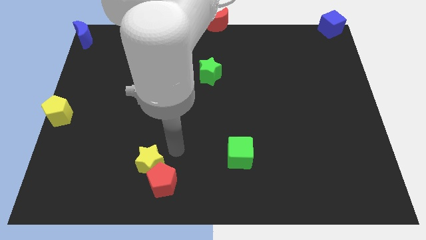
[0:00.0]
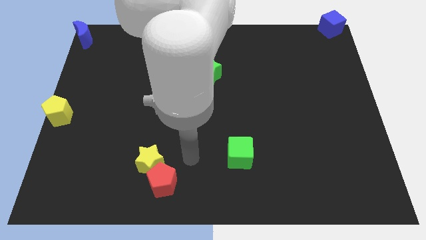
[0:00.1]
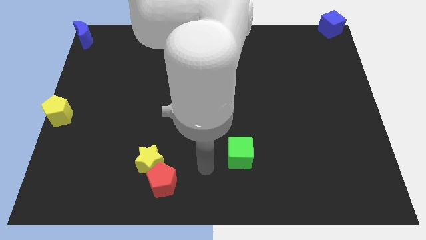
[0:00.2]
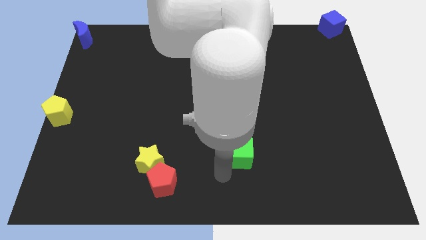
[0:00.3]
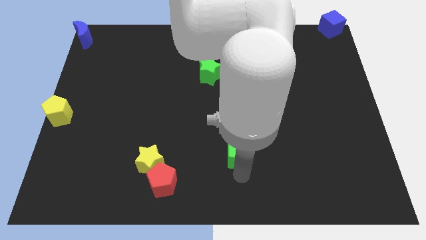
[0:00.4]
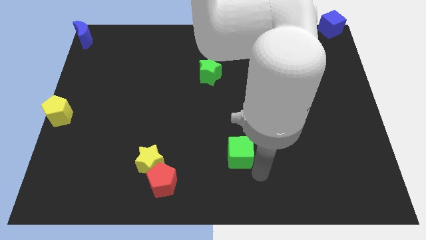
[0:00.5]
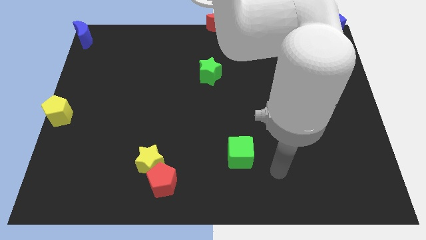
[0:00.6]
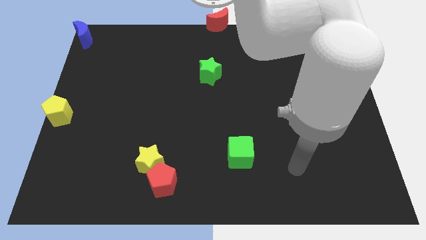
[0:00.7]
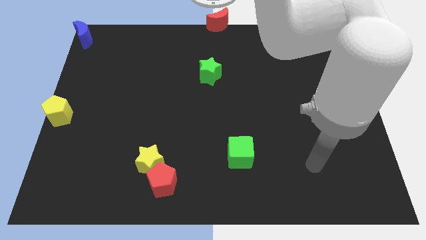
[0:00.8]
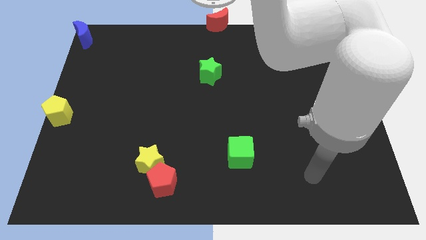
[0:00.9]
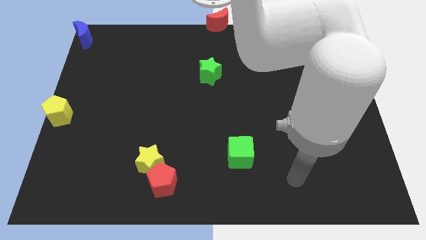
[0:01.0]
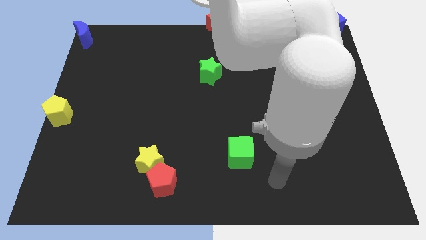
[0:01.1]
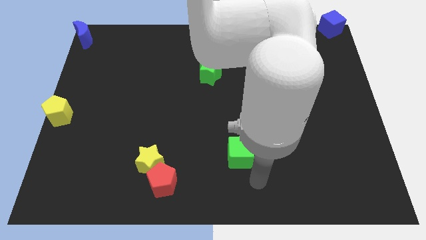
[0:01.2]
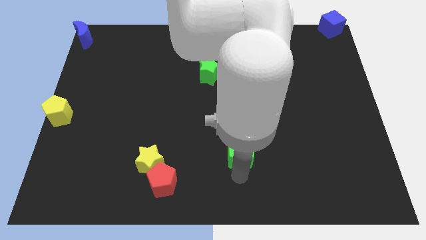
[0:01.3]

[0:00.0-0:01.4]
point your arm at the bottom of green cube

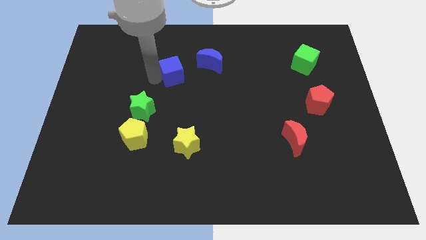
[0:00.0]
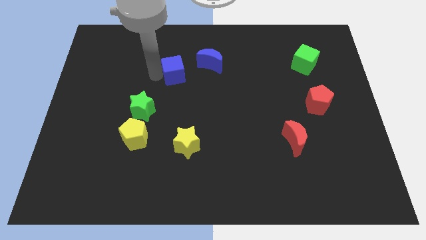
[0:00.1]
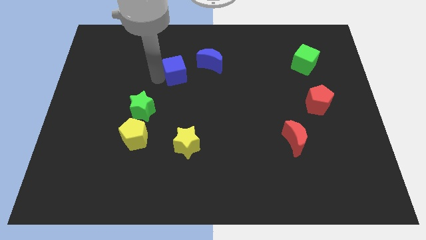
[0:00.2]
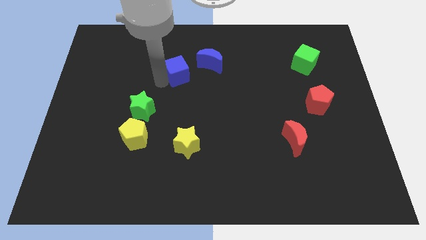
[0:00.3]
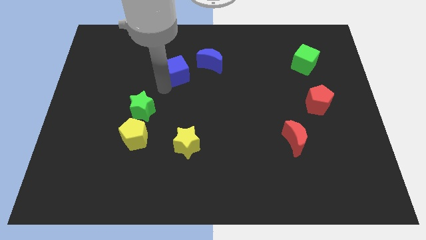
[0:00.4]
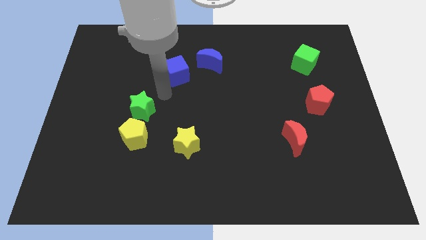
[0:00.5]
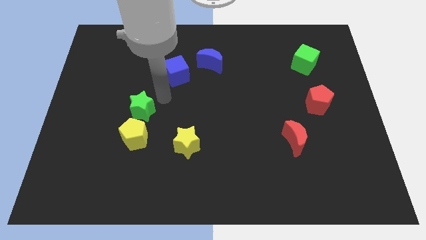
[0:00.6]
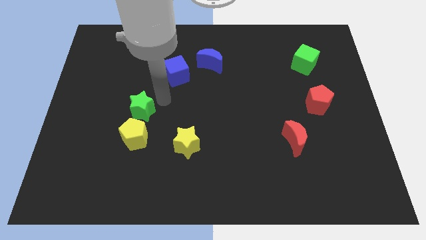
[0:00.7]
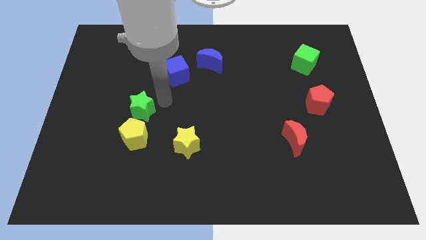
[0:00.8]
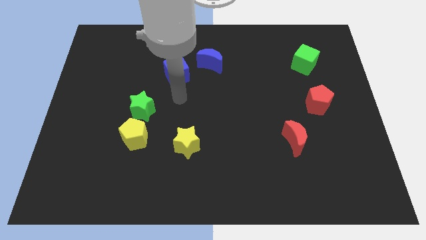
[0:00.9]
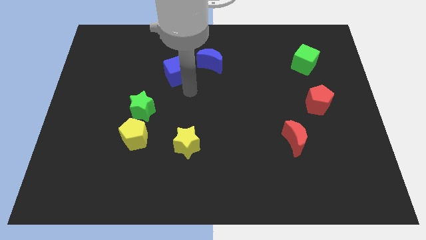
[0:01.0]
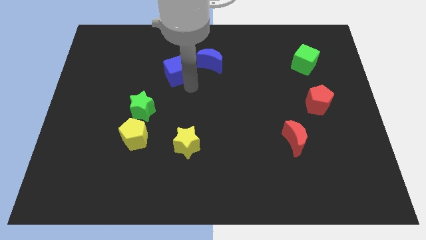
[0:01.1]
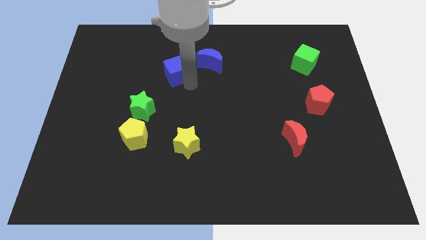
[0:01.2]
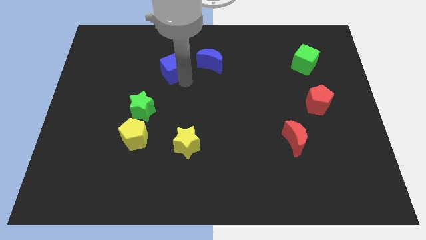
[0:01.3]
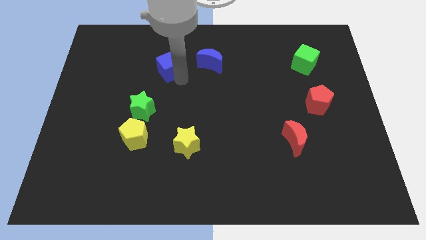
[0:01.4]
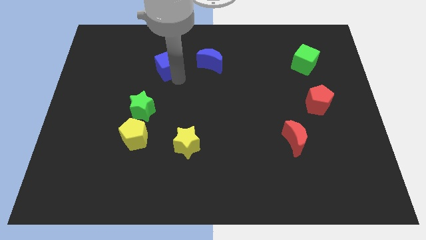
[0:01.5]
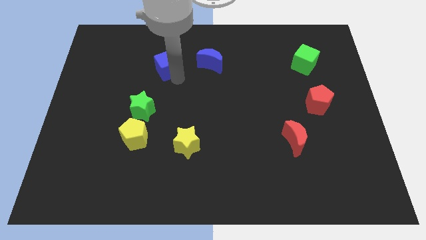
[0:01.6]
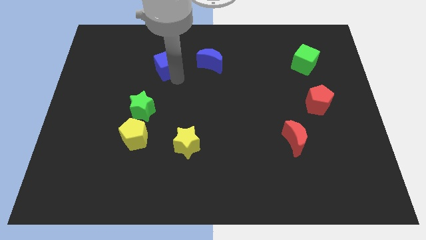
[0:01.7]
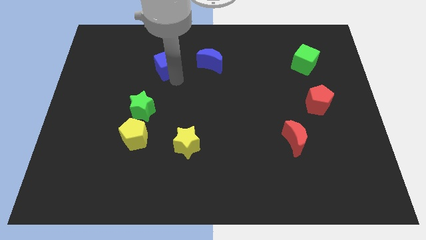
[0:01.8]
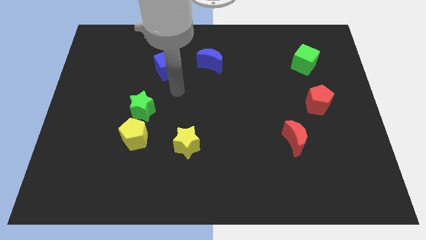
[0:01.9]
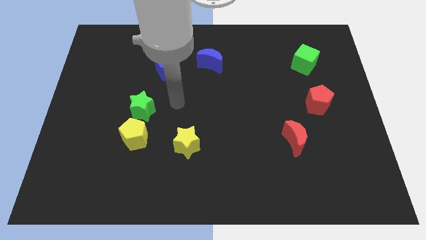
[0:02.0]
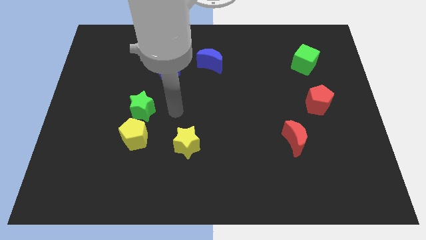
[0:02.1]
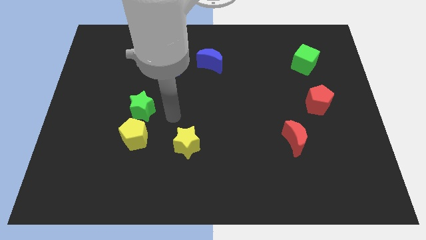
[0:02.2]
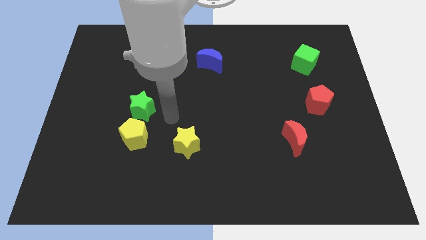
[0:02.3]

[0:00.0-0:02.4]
push blue cube slightly upwards

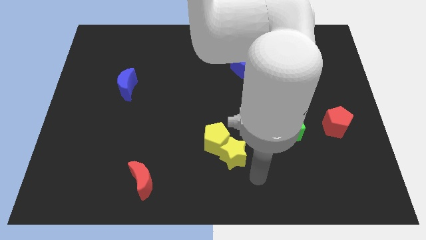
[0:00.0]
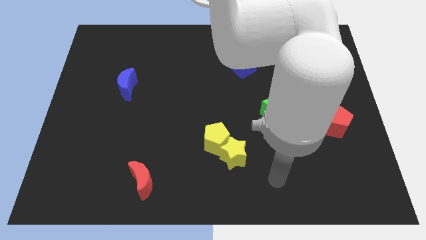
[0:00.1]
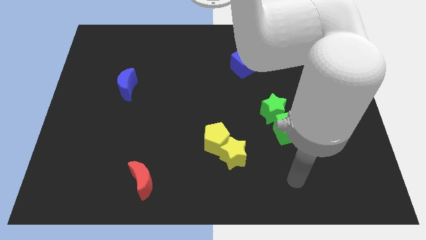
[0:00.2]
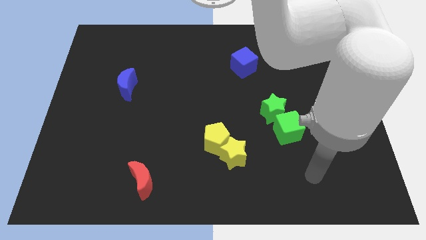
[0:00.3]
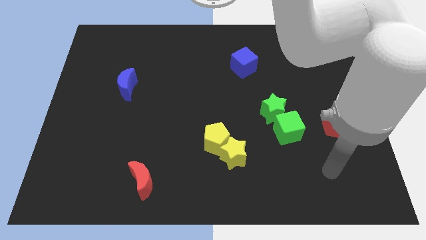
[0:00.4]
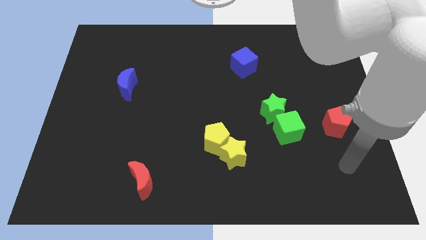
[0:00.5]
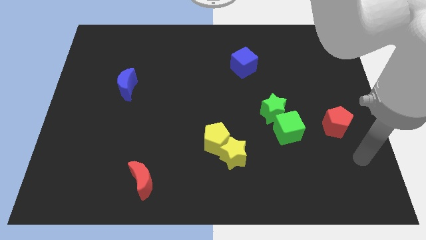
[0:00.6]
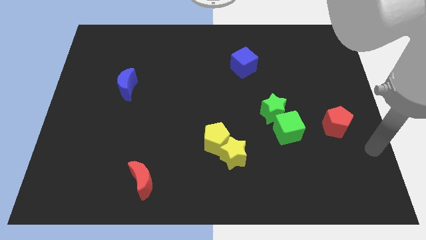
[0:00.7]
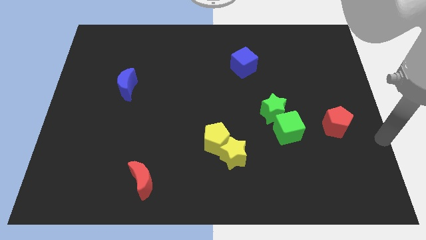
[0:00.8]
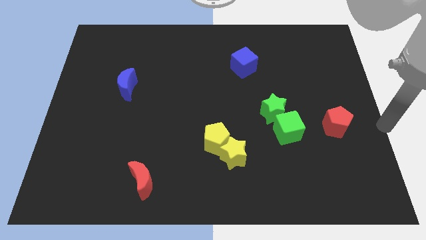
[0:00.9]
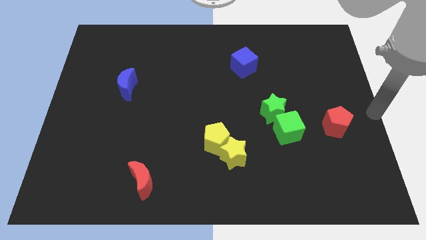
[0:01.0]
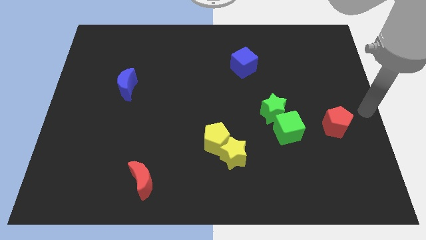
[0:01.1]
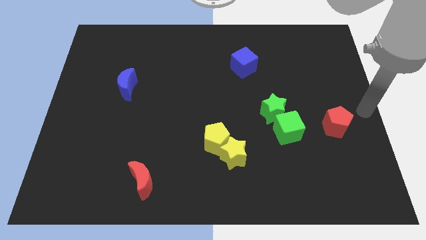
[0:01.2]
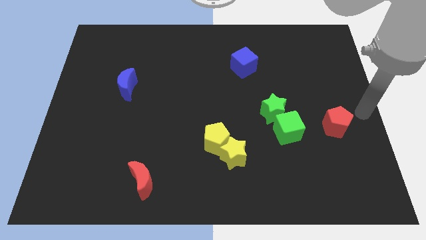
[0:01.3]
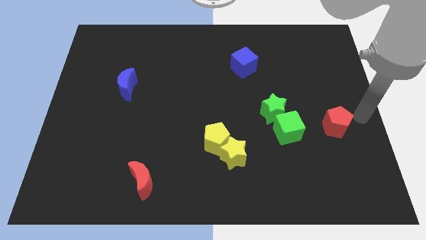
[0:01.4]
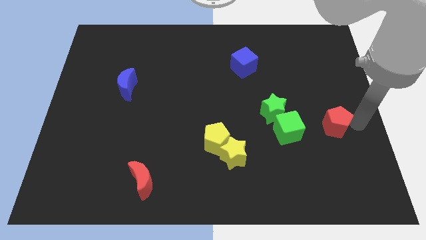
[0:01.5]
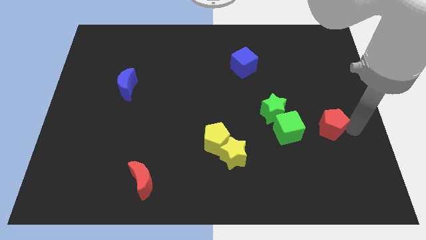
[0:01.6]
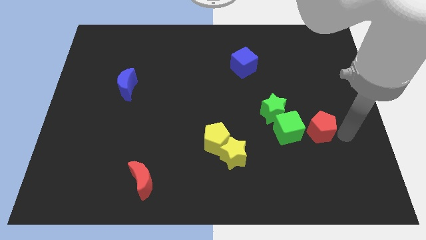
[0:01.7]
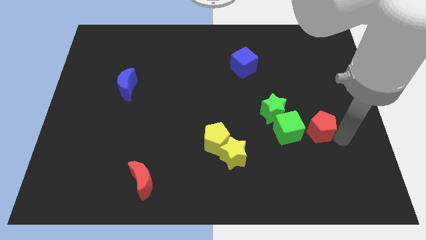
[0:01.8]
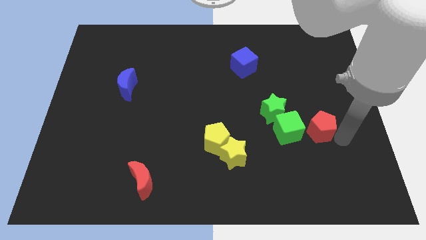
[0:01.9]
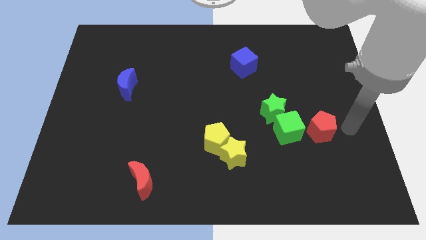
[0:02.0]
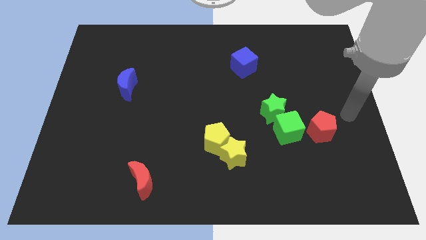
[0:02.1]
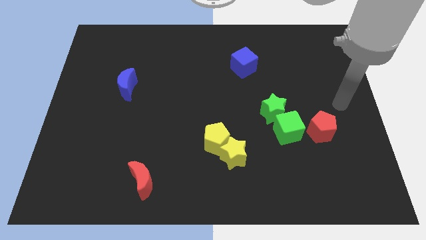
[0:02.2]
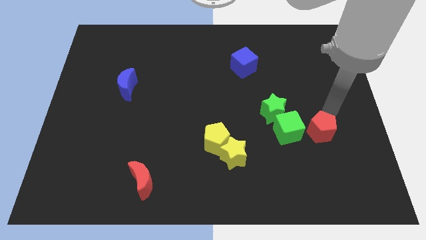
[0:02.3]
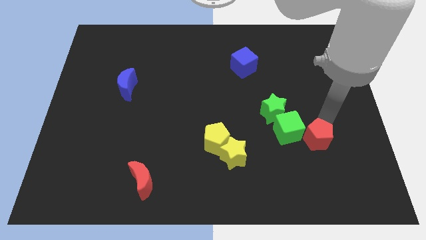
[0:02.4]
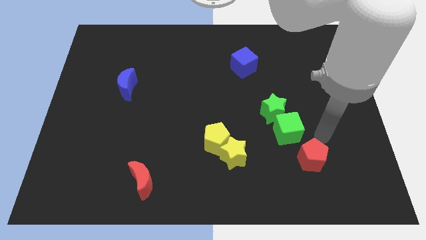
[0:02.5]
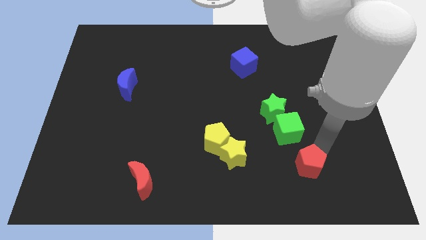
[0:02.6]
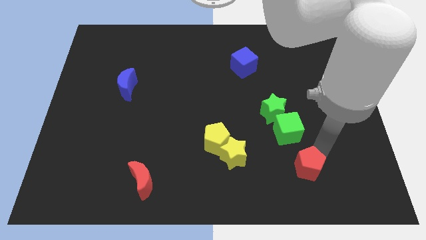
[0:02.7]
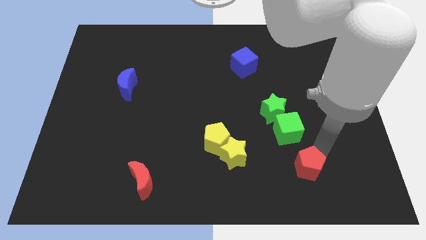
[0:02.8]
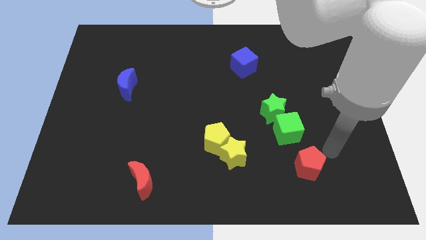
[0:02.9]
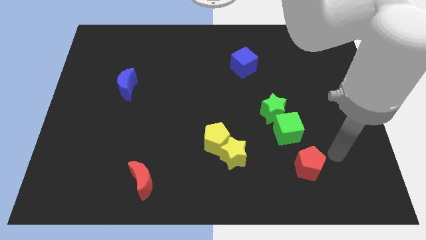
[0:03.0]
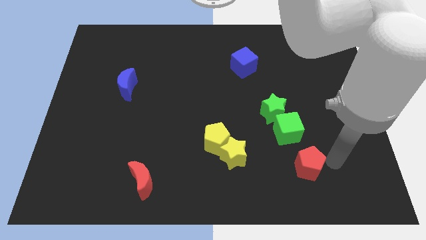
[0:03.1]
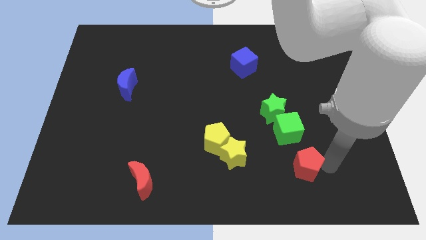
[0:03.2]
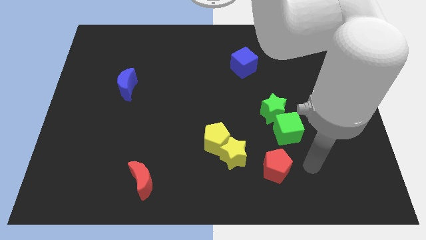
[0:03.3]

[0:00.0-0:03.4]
place the red pentagon under the green cube

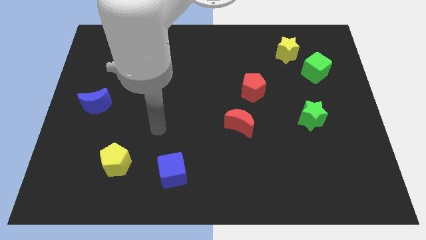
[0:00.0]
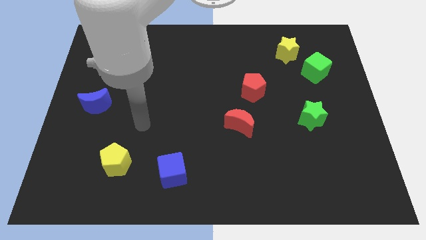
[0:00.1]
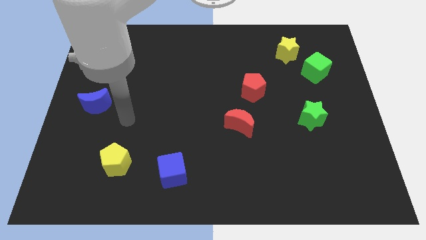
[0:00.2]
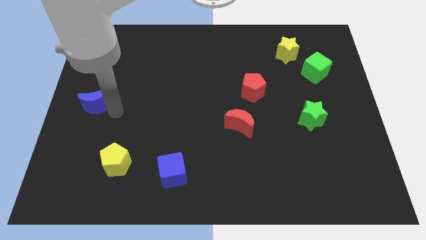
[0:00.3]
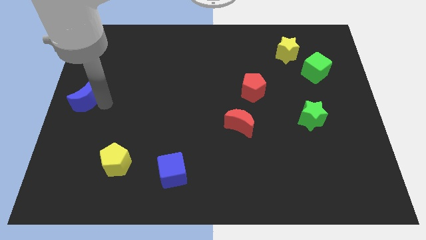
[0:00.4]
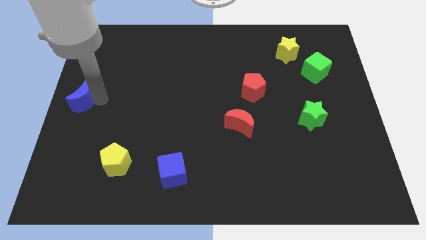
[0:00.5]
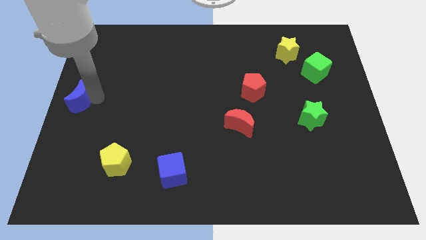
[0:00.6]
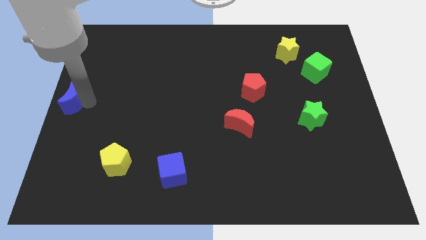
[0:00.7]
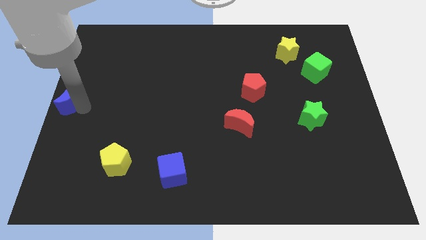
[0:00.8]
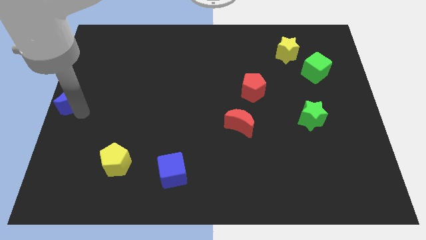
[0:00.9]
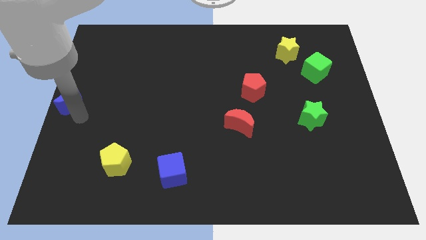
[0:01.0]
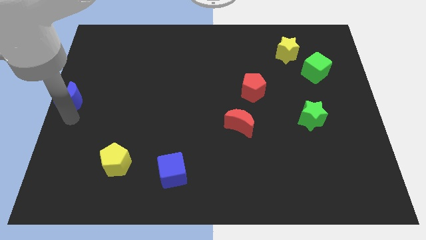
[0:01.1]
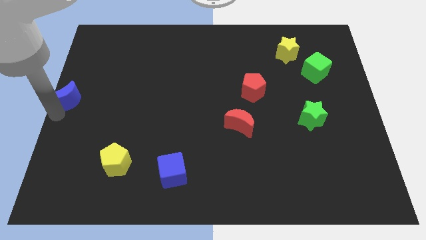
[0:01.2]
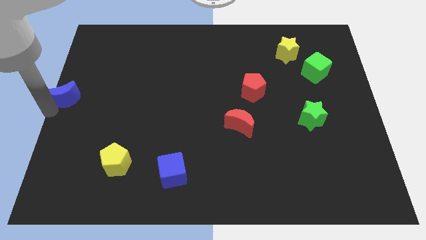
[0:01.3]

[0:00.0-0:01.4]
place the blue moon to the center left side of the board

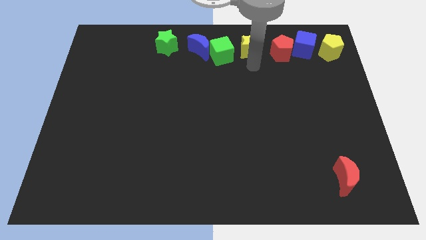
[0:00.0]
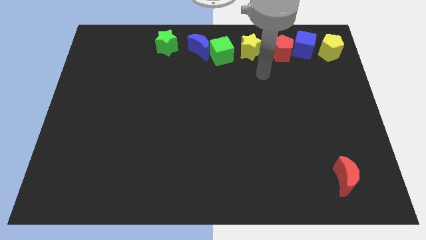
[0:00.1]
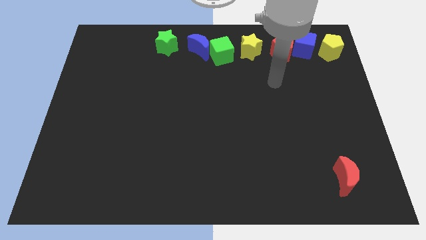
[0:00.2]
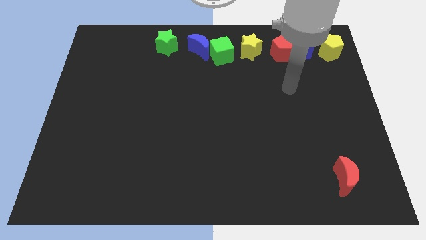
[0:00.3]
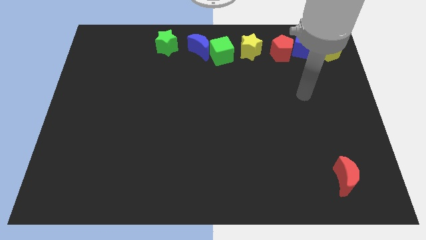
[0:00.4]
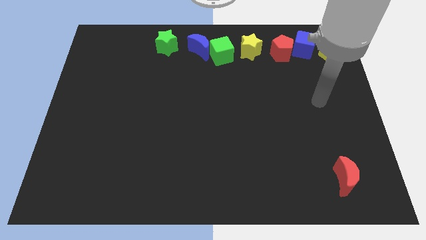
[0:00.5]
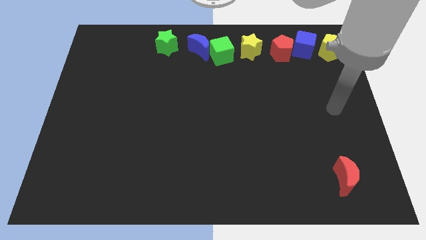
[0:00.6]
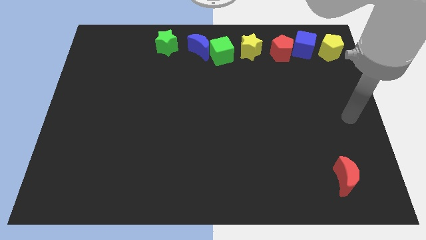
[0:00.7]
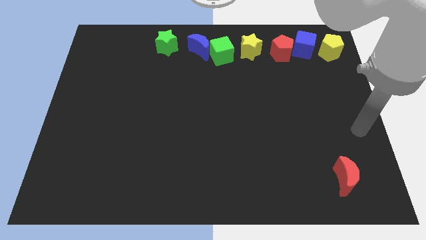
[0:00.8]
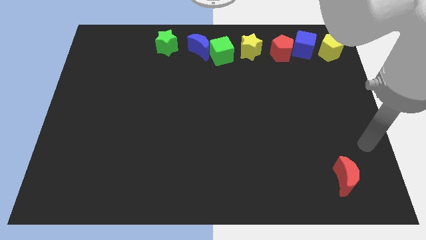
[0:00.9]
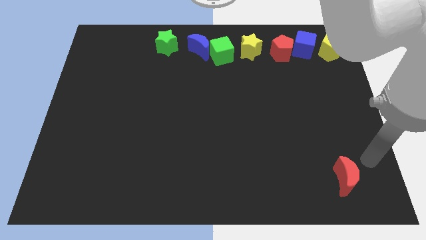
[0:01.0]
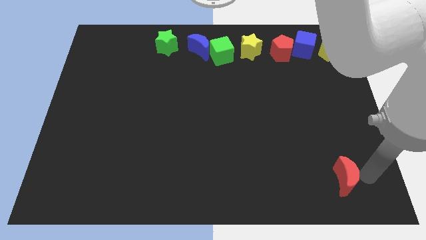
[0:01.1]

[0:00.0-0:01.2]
move your arm to the red moon
